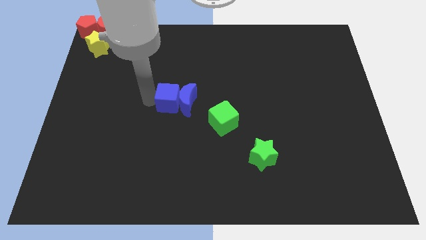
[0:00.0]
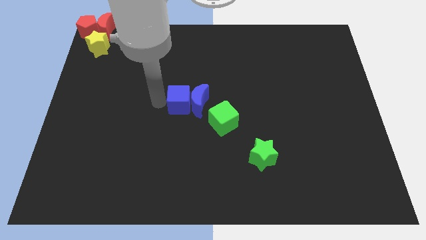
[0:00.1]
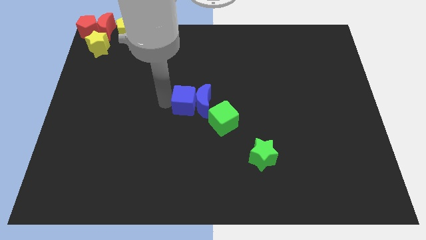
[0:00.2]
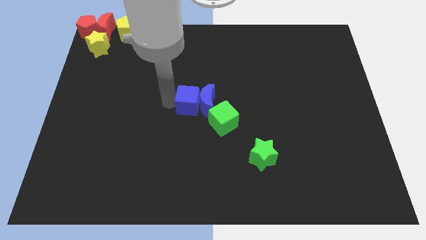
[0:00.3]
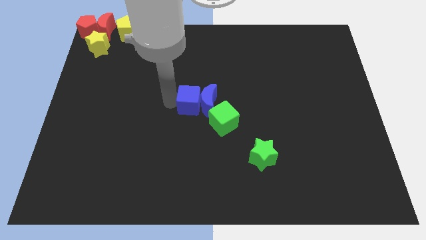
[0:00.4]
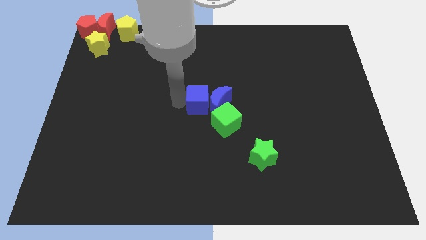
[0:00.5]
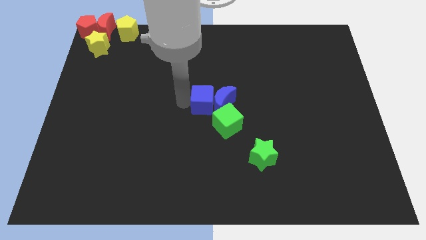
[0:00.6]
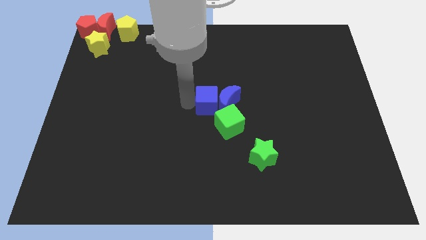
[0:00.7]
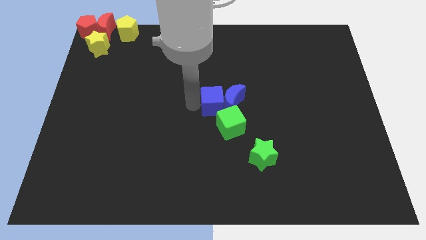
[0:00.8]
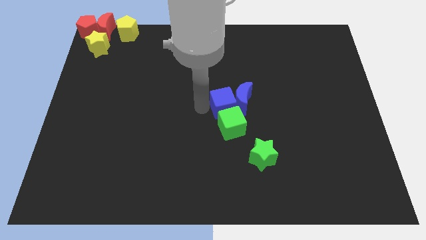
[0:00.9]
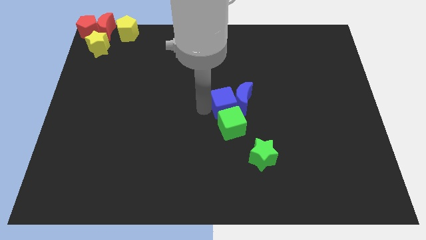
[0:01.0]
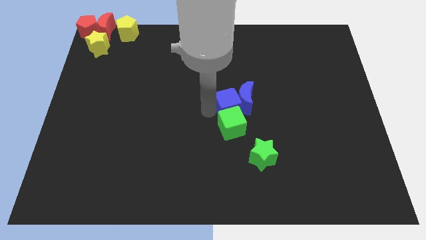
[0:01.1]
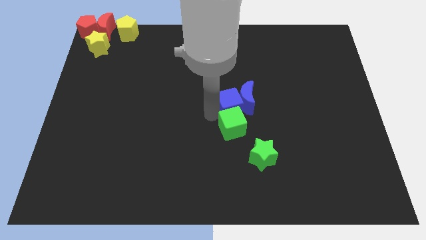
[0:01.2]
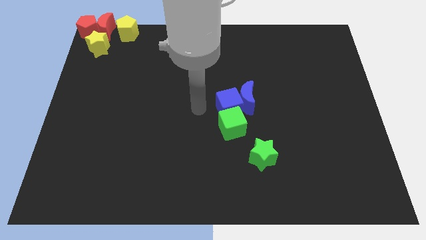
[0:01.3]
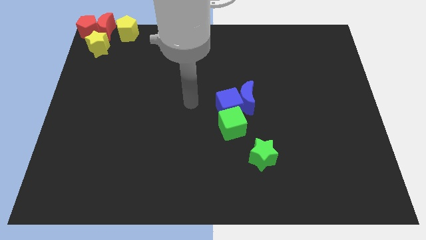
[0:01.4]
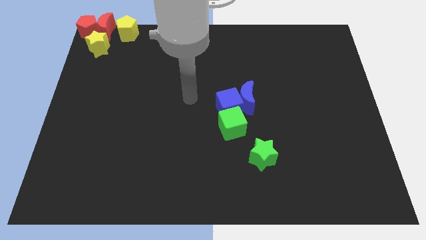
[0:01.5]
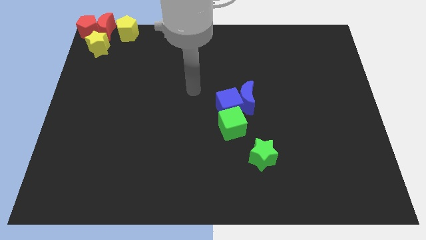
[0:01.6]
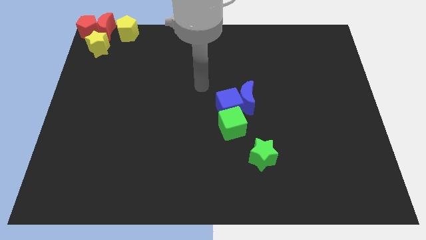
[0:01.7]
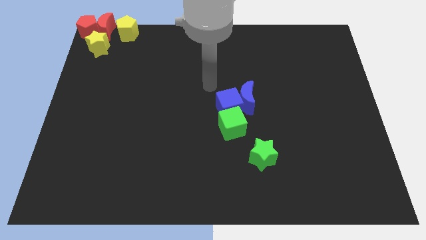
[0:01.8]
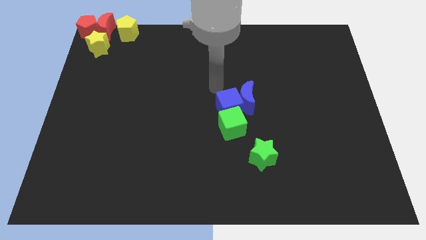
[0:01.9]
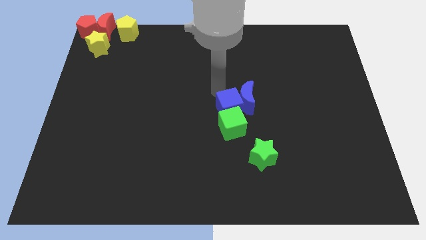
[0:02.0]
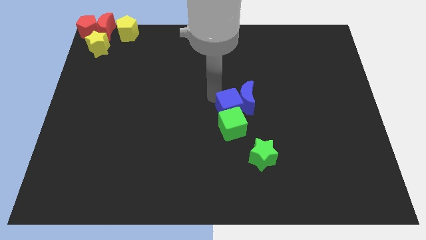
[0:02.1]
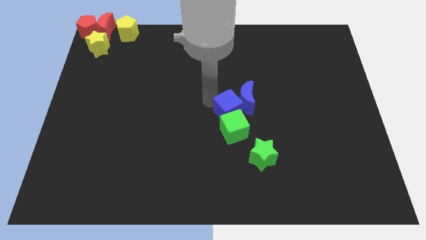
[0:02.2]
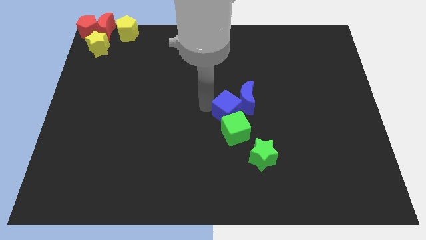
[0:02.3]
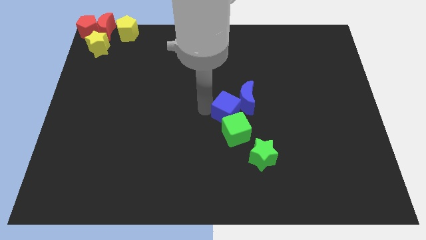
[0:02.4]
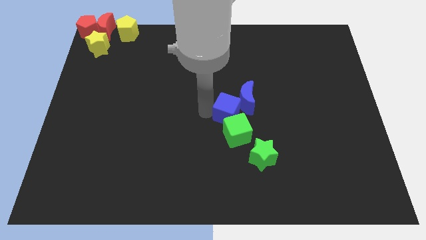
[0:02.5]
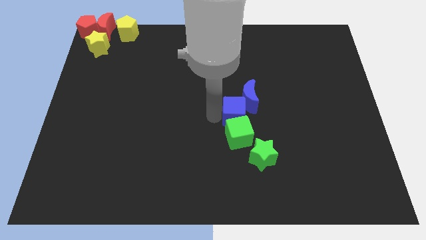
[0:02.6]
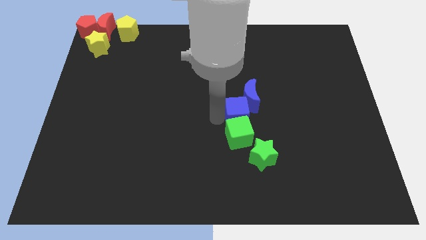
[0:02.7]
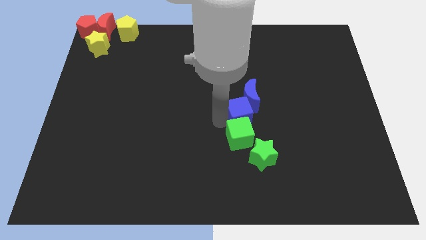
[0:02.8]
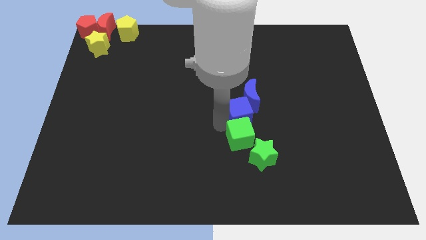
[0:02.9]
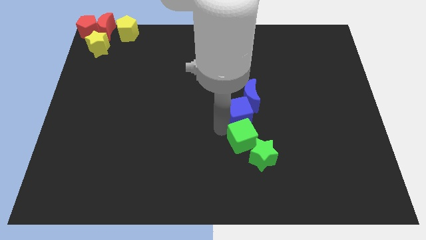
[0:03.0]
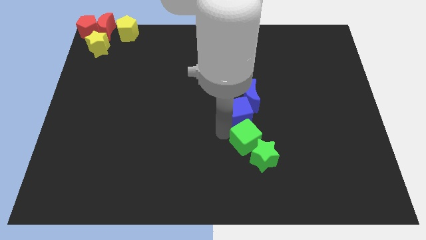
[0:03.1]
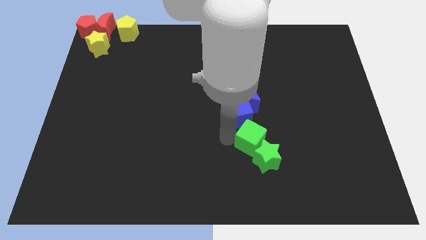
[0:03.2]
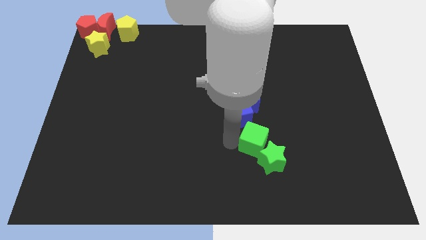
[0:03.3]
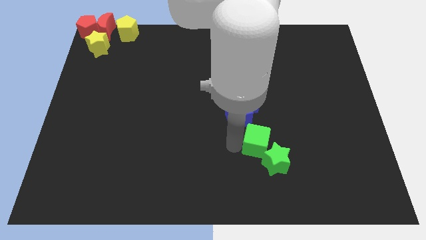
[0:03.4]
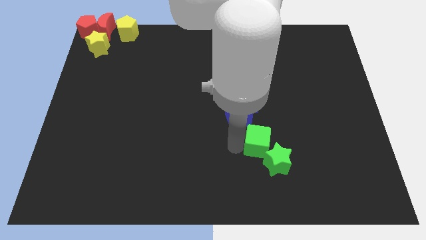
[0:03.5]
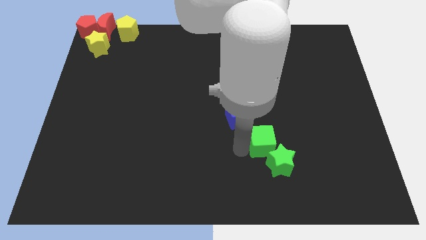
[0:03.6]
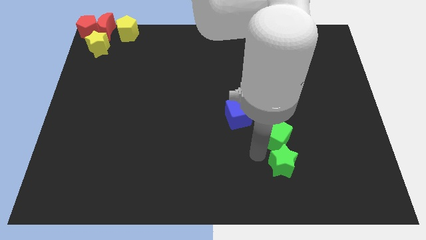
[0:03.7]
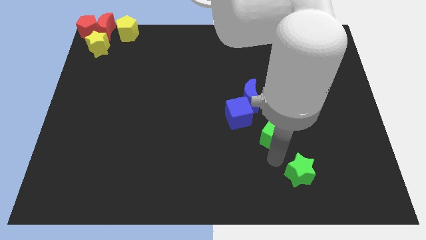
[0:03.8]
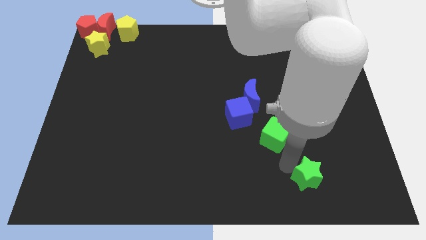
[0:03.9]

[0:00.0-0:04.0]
arrange both the green blocks and blue crescent diagonal to each other

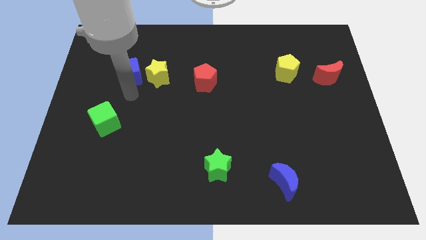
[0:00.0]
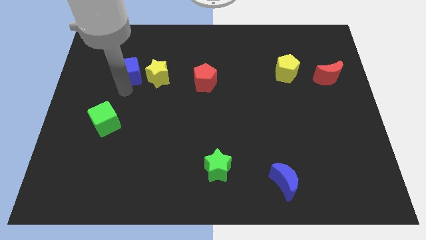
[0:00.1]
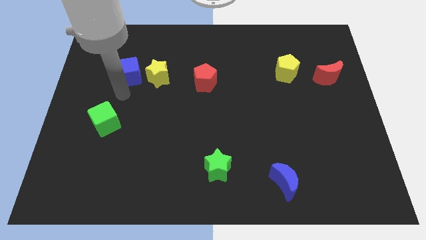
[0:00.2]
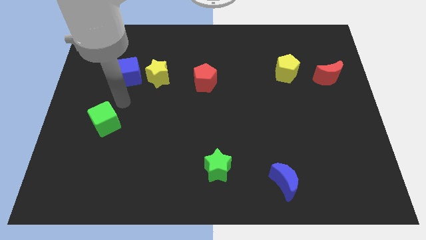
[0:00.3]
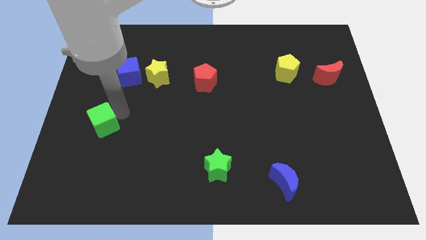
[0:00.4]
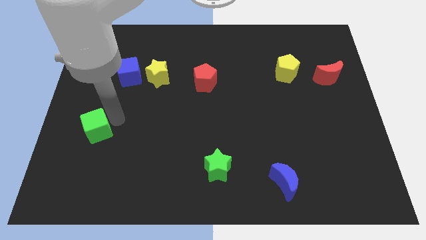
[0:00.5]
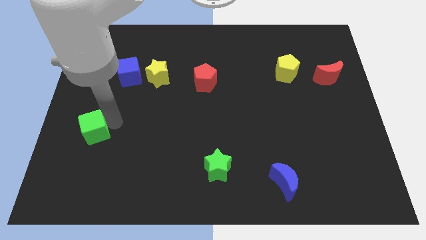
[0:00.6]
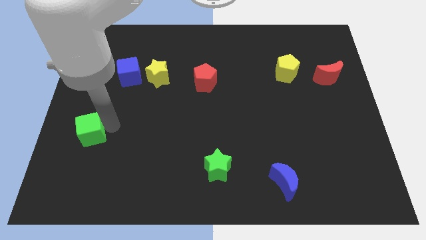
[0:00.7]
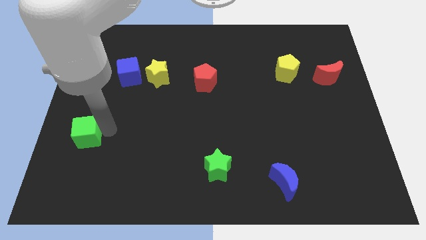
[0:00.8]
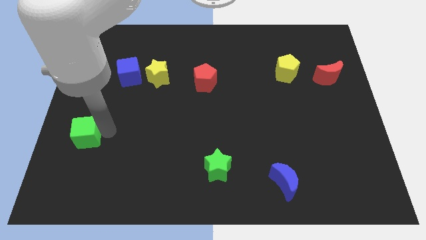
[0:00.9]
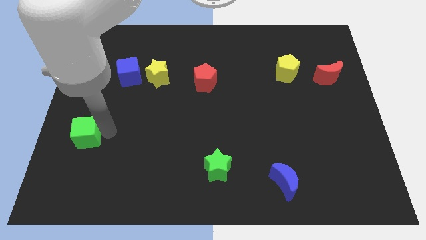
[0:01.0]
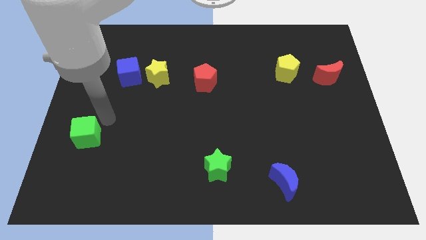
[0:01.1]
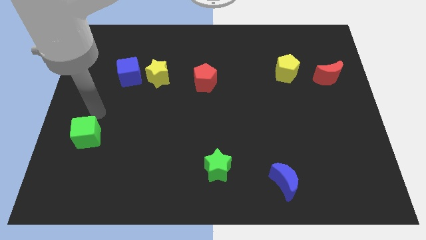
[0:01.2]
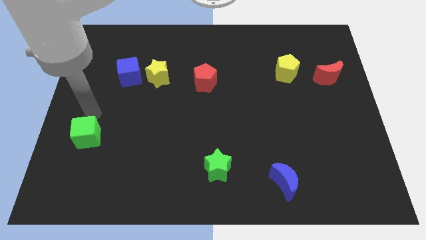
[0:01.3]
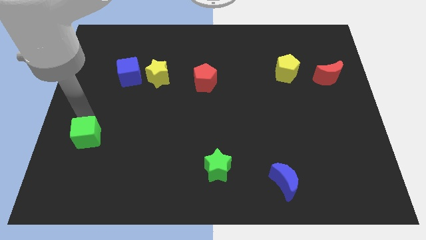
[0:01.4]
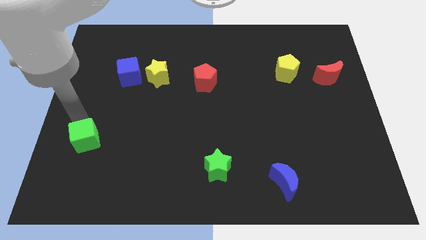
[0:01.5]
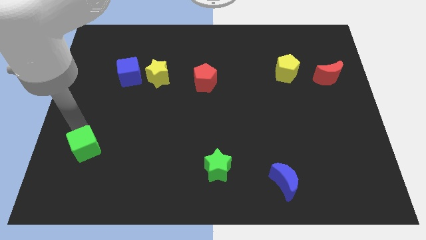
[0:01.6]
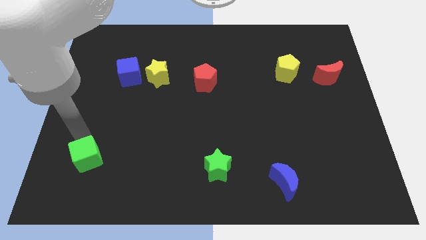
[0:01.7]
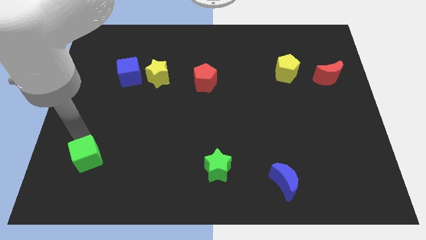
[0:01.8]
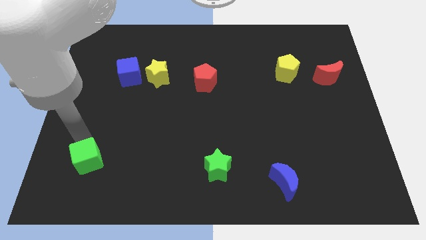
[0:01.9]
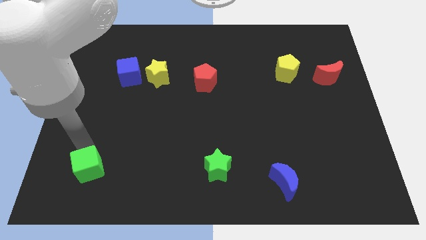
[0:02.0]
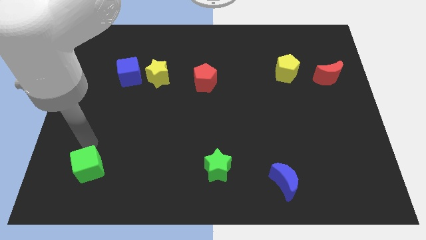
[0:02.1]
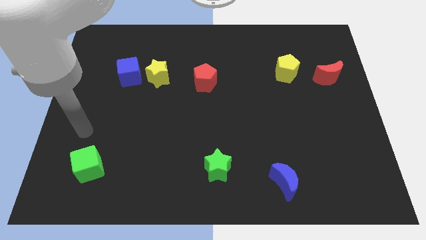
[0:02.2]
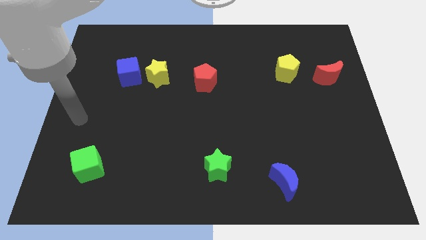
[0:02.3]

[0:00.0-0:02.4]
push the green cube downwards in such a way it is parallel to green star

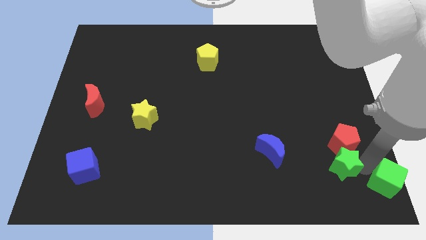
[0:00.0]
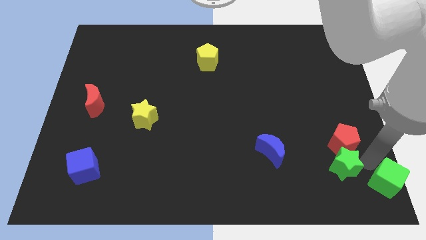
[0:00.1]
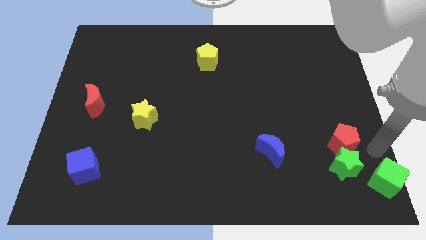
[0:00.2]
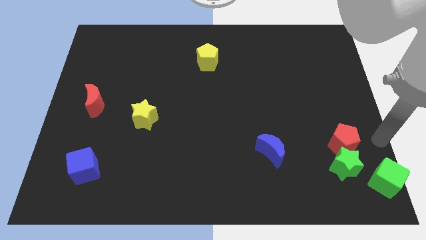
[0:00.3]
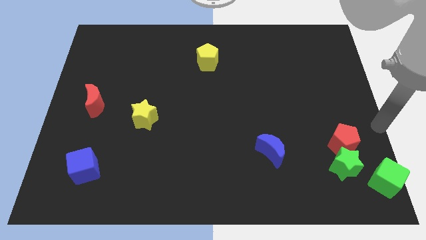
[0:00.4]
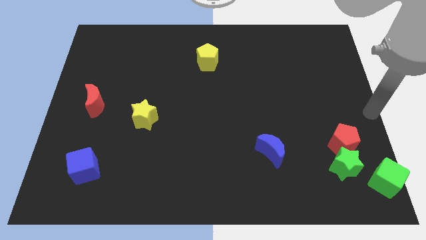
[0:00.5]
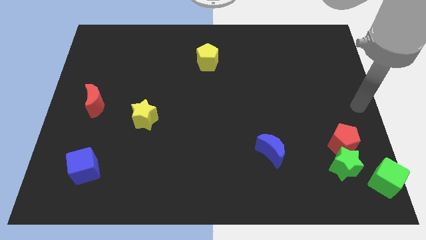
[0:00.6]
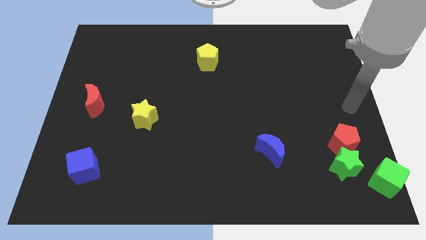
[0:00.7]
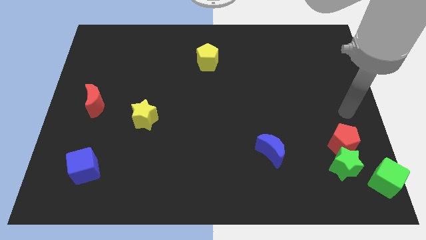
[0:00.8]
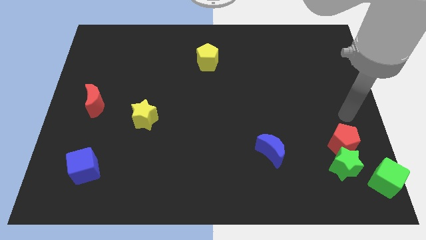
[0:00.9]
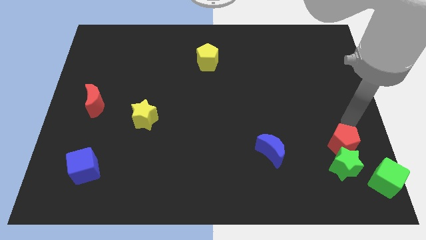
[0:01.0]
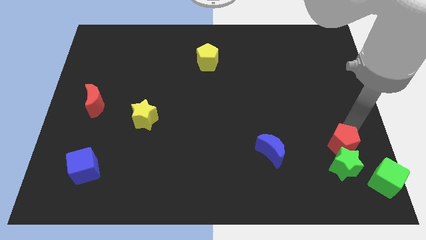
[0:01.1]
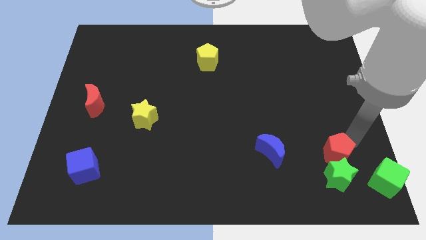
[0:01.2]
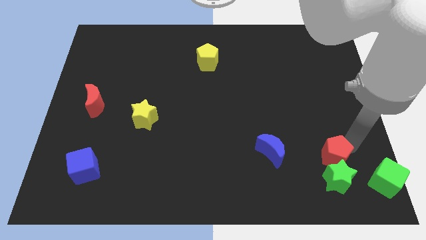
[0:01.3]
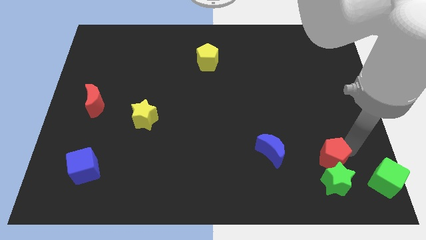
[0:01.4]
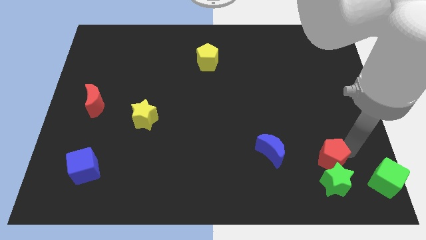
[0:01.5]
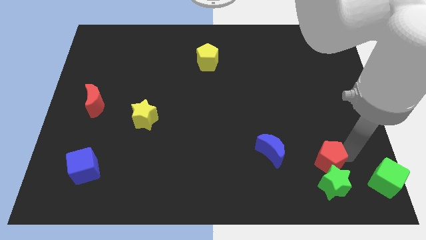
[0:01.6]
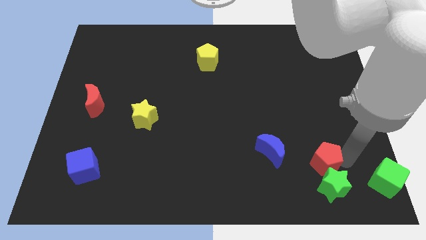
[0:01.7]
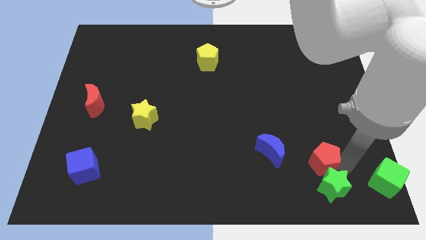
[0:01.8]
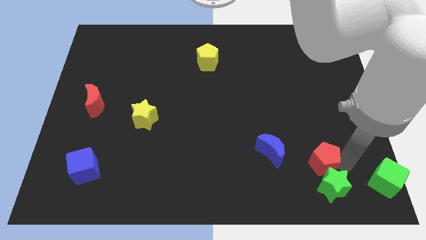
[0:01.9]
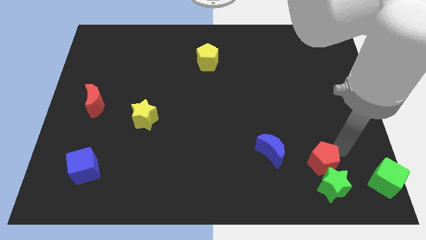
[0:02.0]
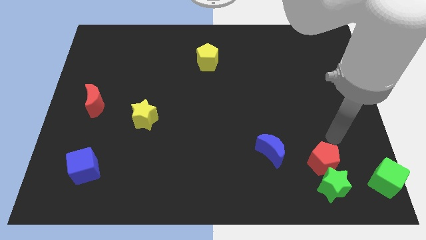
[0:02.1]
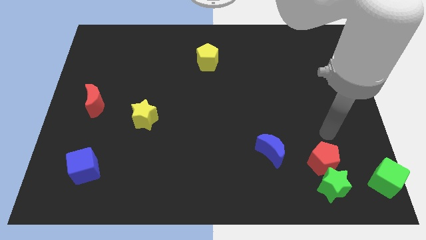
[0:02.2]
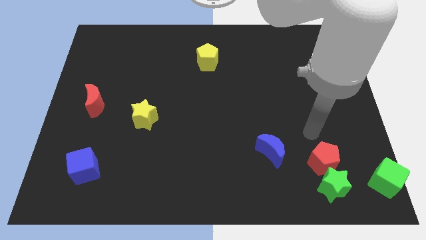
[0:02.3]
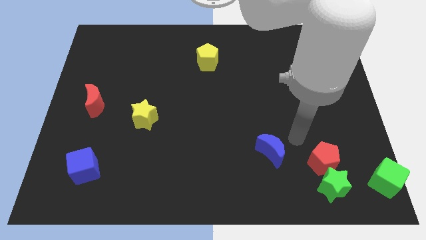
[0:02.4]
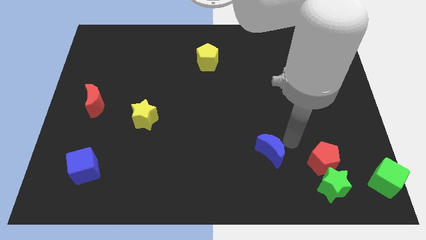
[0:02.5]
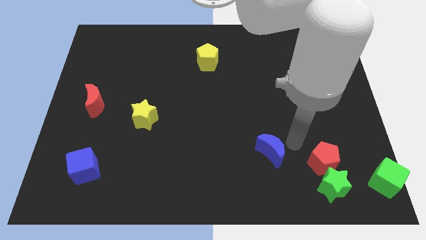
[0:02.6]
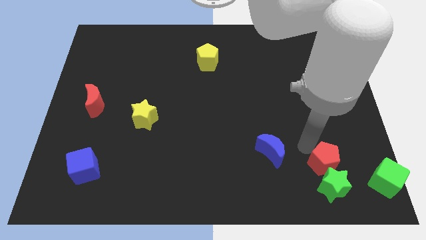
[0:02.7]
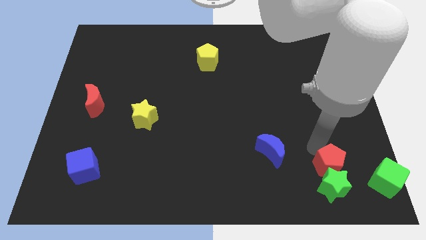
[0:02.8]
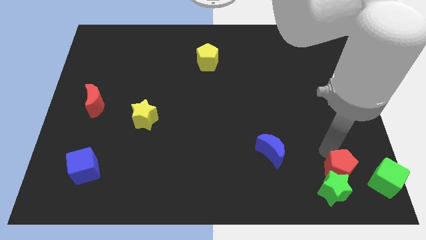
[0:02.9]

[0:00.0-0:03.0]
place the red pentagon right to the blue moon
